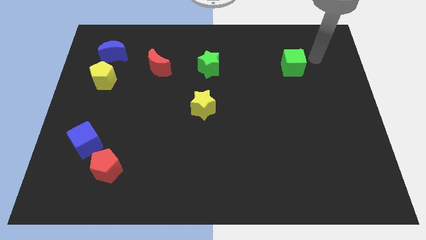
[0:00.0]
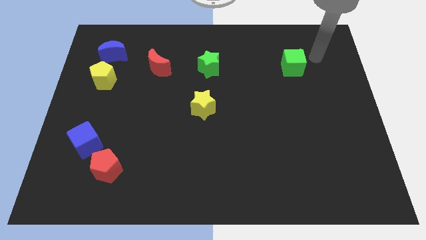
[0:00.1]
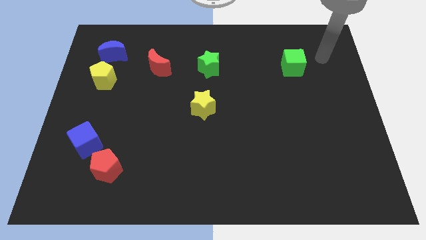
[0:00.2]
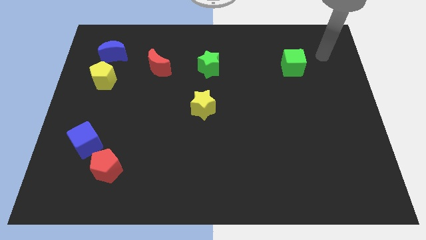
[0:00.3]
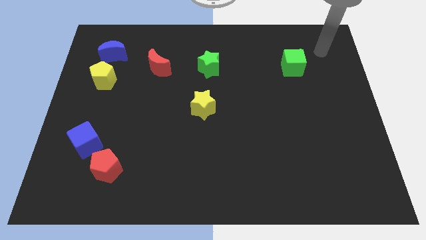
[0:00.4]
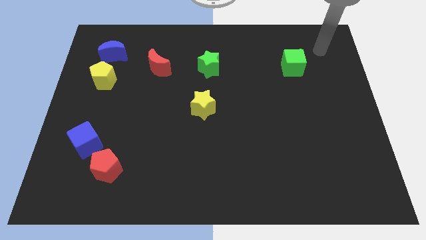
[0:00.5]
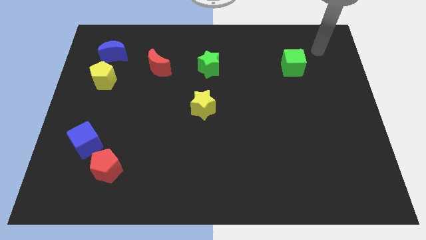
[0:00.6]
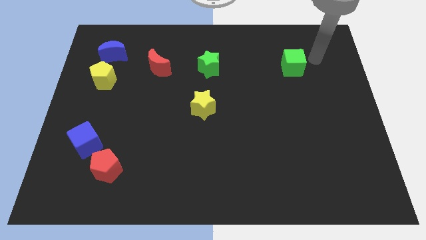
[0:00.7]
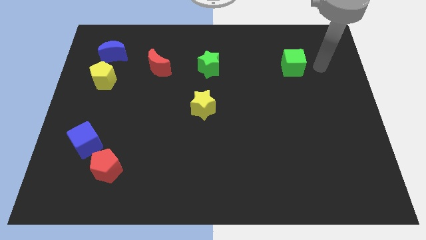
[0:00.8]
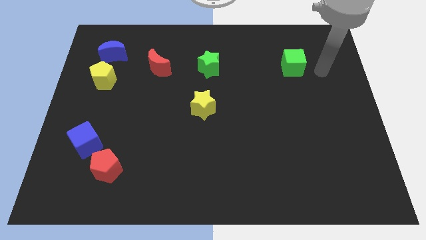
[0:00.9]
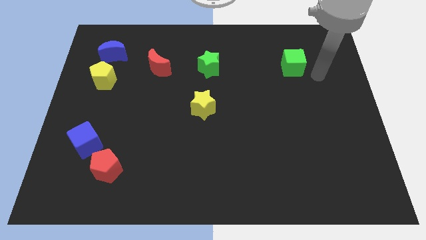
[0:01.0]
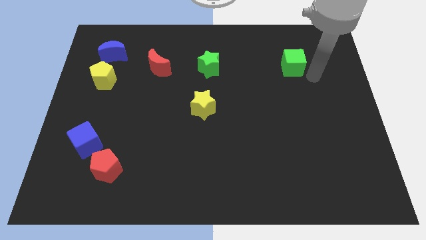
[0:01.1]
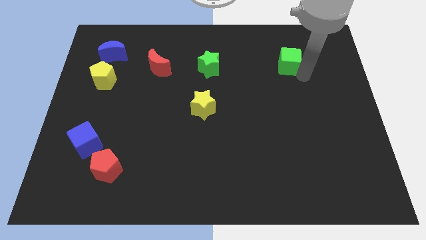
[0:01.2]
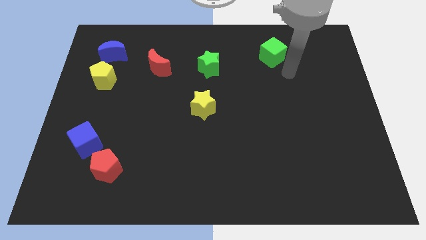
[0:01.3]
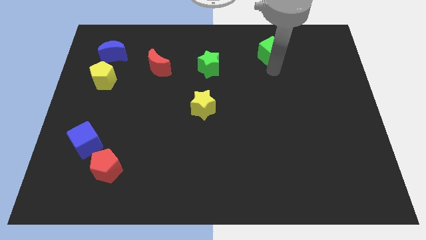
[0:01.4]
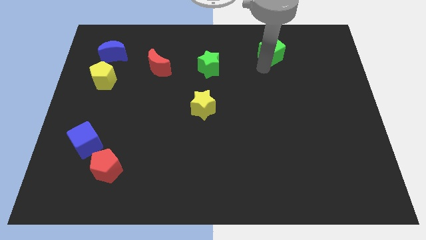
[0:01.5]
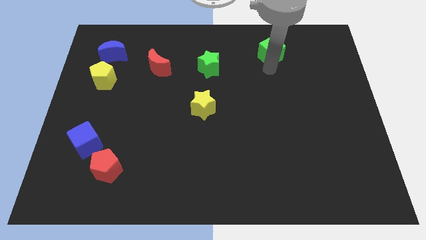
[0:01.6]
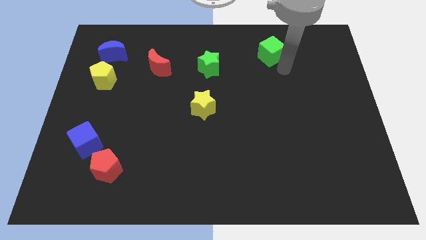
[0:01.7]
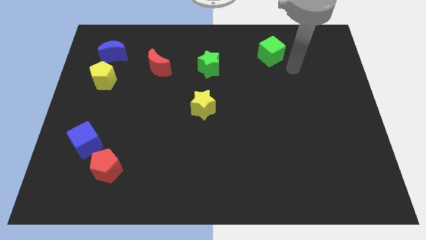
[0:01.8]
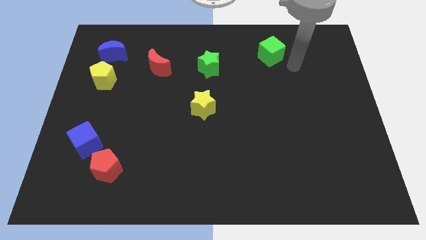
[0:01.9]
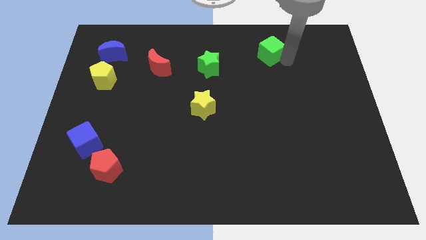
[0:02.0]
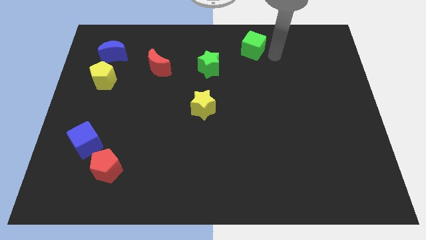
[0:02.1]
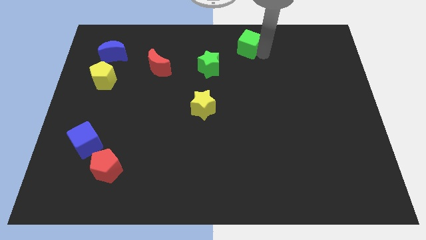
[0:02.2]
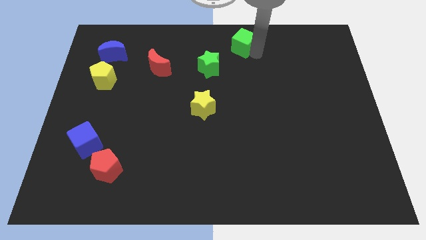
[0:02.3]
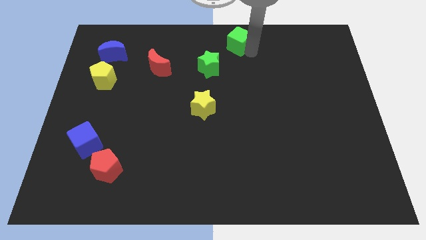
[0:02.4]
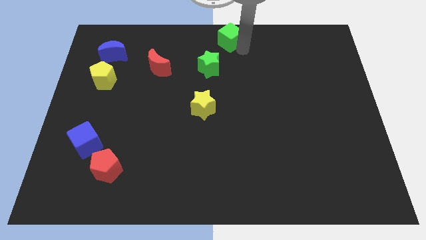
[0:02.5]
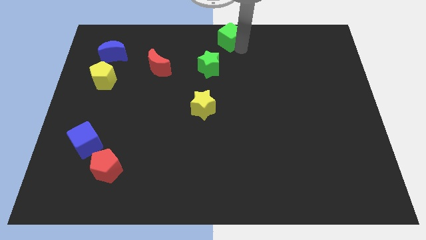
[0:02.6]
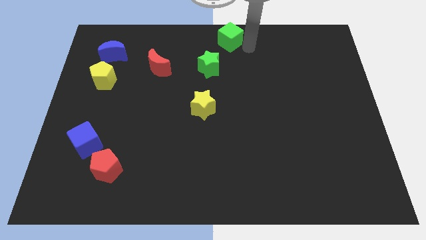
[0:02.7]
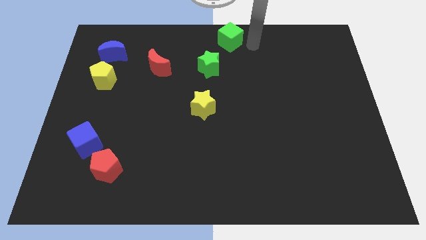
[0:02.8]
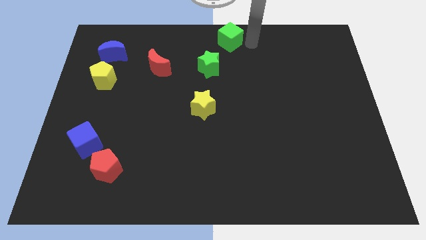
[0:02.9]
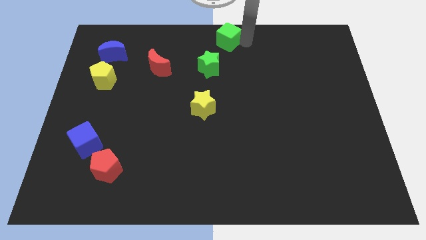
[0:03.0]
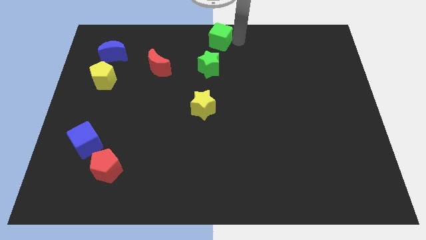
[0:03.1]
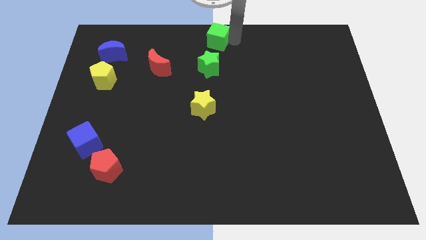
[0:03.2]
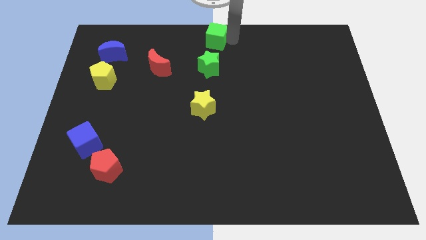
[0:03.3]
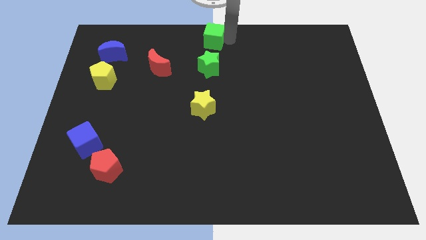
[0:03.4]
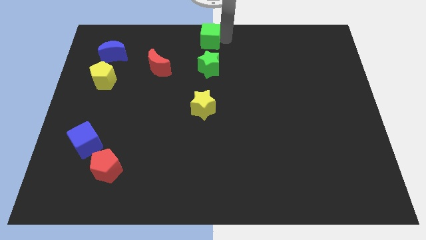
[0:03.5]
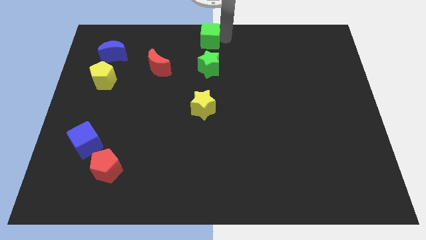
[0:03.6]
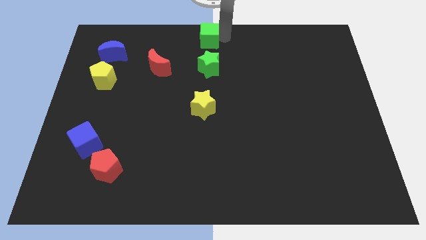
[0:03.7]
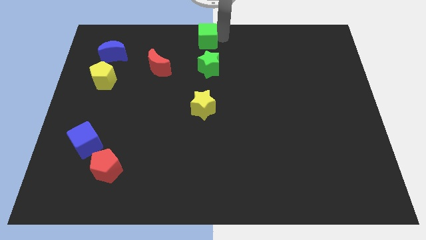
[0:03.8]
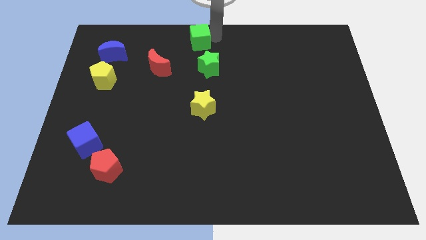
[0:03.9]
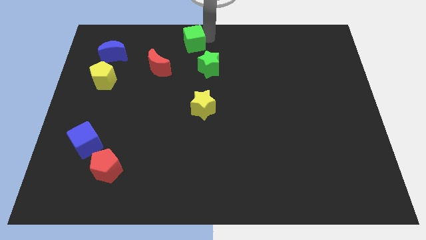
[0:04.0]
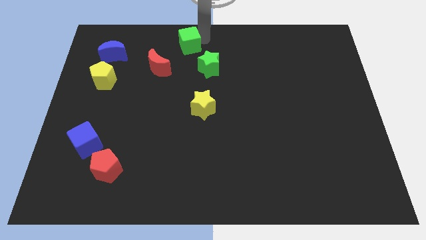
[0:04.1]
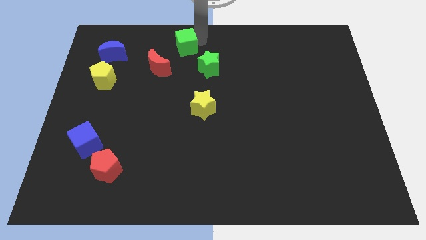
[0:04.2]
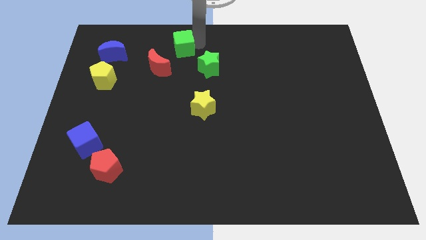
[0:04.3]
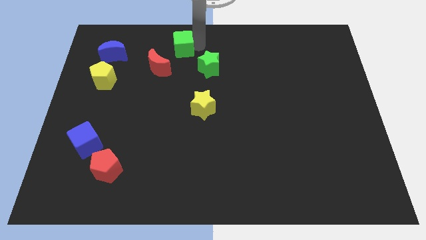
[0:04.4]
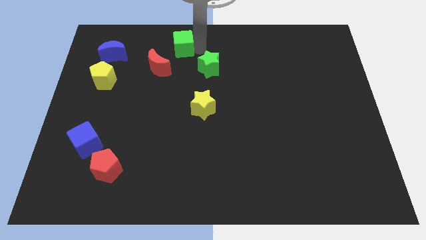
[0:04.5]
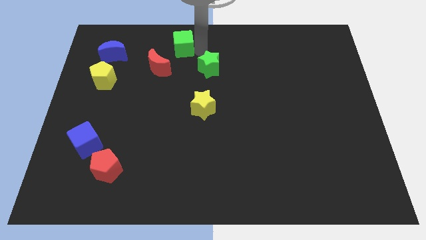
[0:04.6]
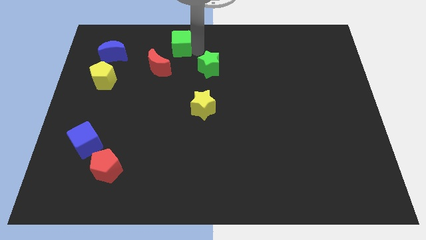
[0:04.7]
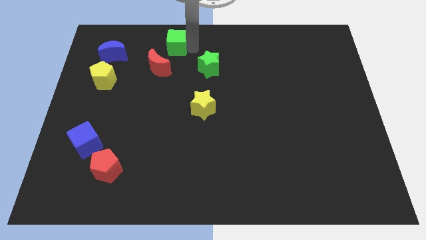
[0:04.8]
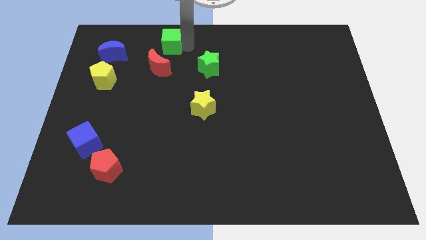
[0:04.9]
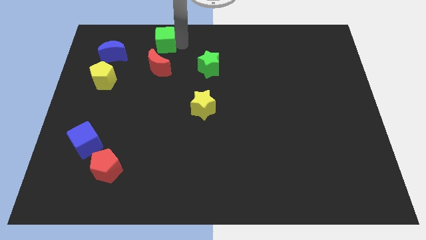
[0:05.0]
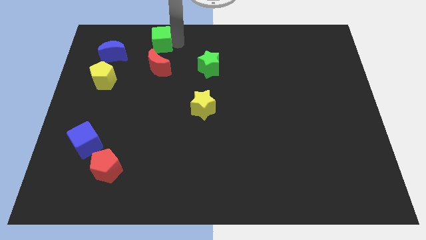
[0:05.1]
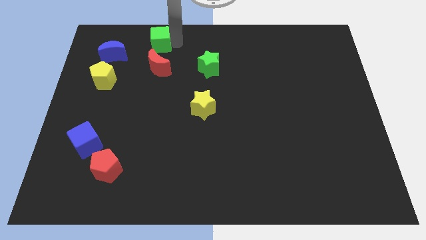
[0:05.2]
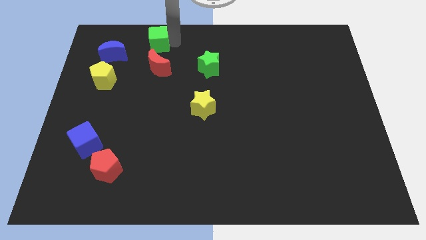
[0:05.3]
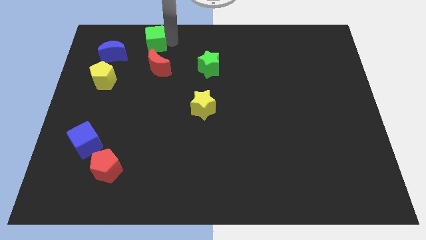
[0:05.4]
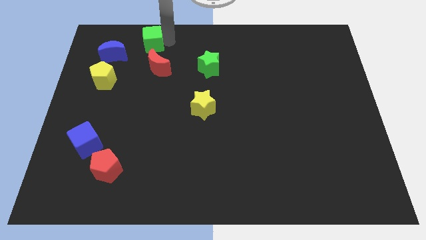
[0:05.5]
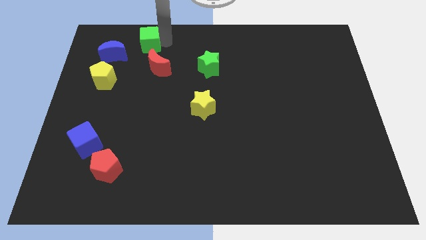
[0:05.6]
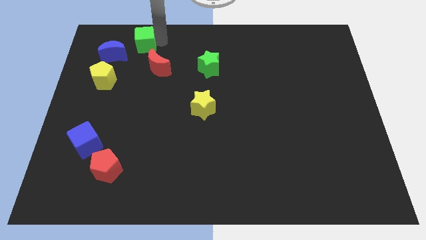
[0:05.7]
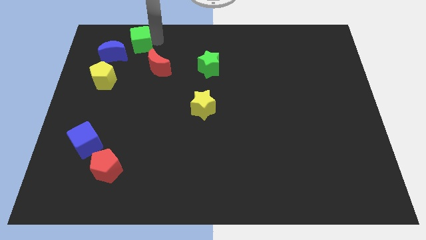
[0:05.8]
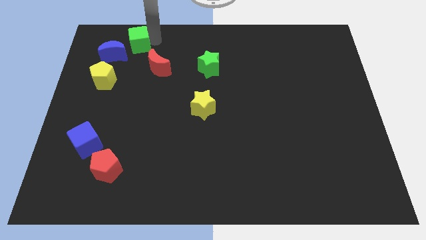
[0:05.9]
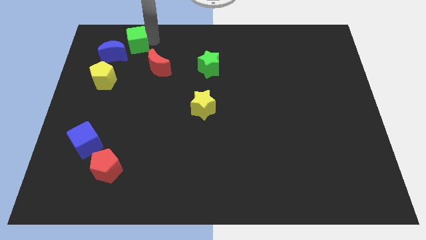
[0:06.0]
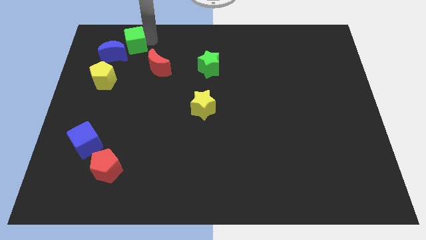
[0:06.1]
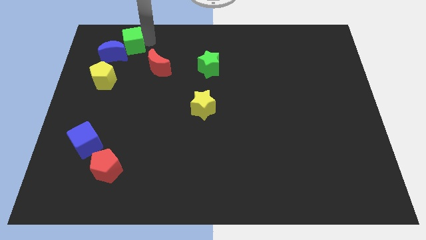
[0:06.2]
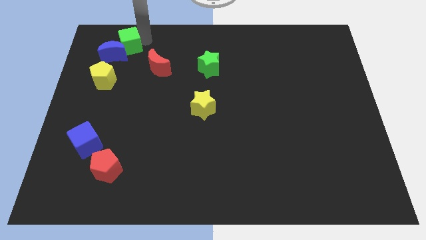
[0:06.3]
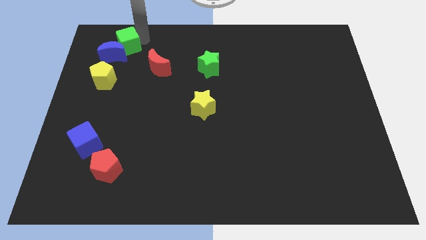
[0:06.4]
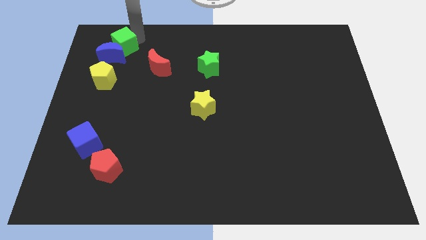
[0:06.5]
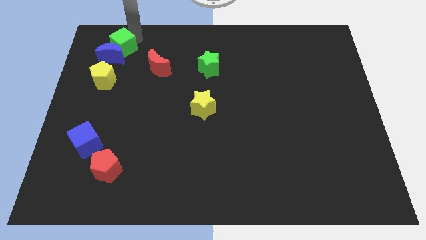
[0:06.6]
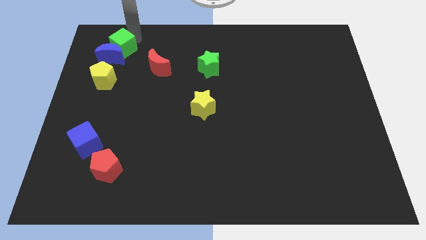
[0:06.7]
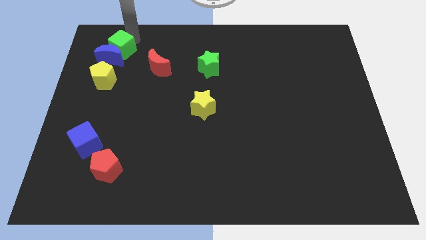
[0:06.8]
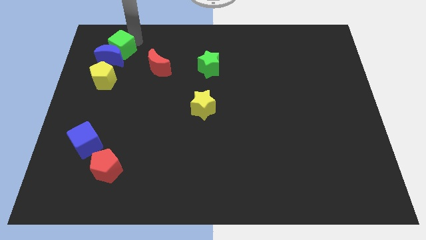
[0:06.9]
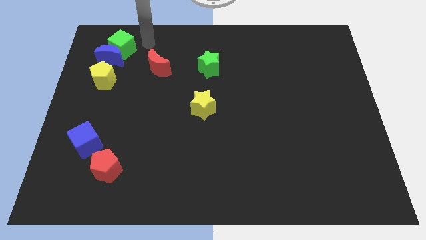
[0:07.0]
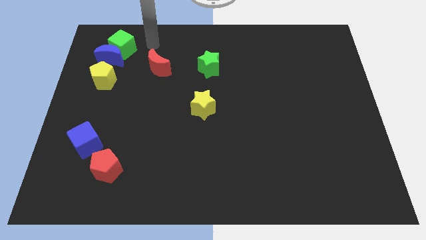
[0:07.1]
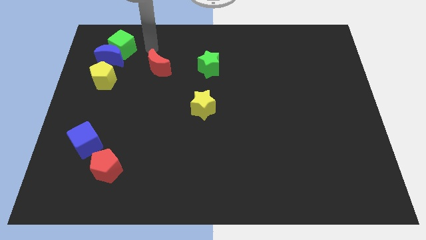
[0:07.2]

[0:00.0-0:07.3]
place the green cube above the blue moon

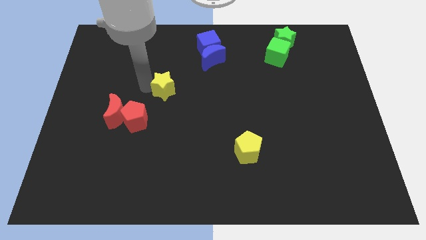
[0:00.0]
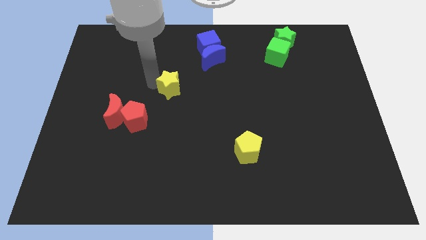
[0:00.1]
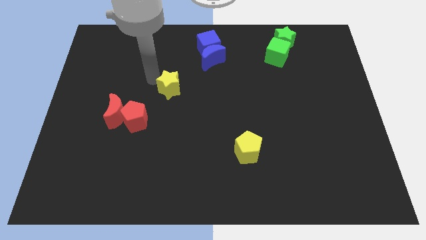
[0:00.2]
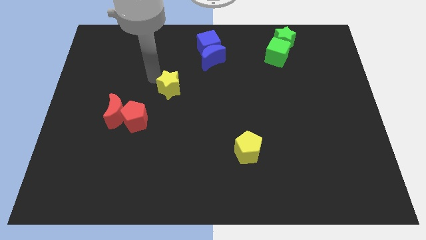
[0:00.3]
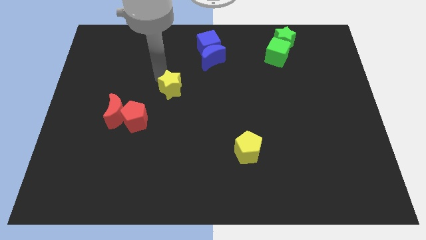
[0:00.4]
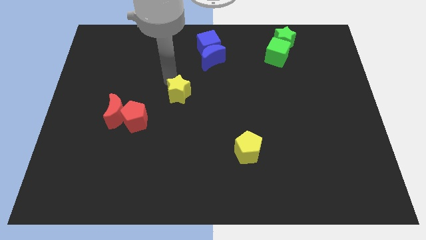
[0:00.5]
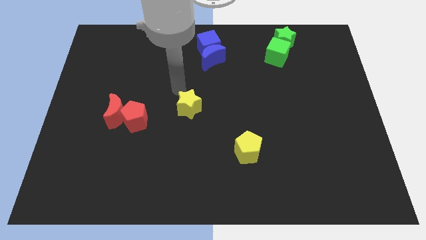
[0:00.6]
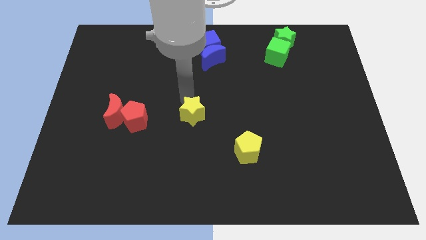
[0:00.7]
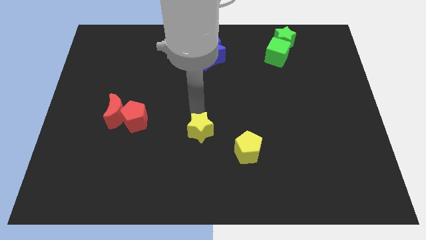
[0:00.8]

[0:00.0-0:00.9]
move yellow star towards yellow pentagon

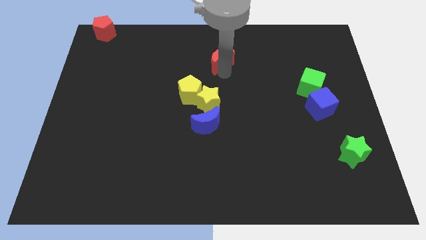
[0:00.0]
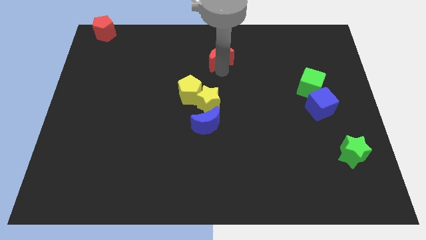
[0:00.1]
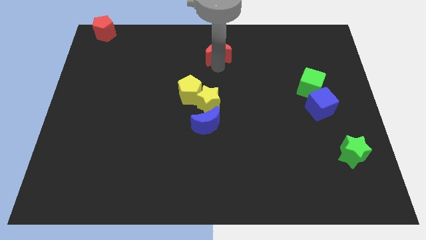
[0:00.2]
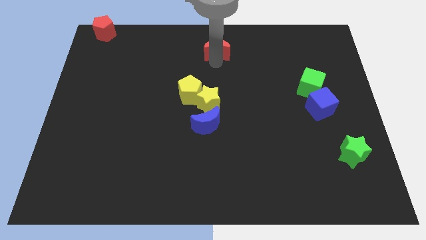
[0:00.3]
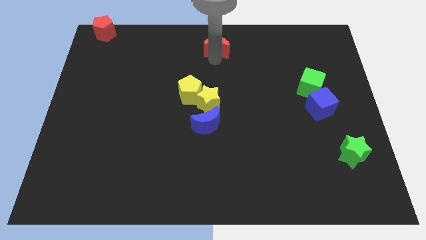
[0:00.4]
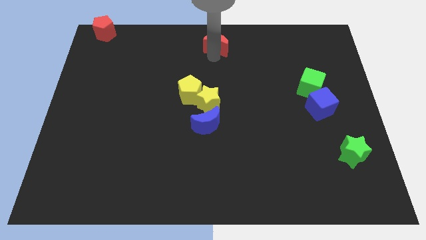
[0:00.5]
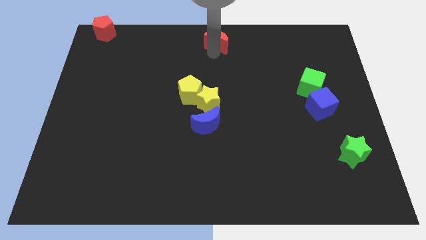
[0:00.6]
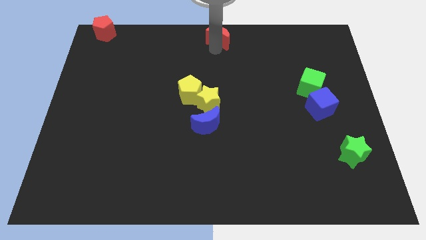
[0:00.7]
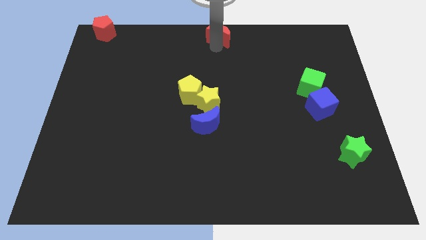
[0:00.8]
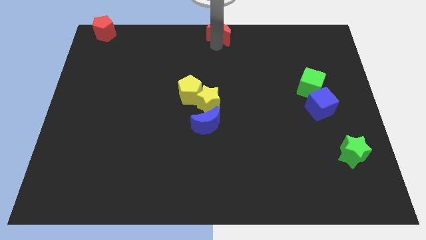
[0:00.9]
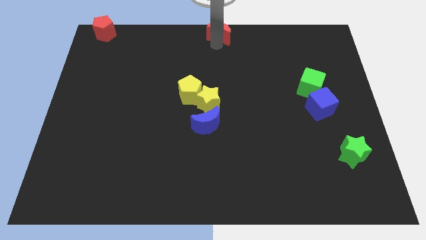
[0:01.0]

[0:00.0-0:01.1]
move red moon to the top center
